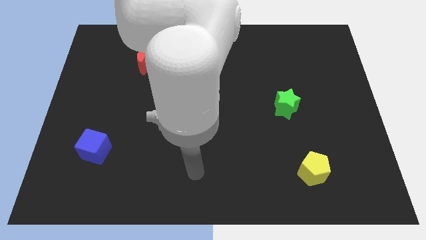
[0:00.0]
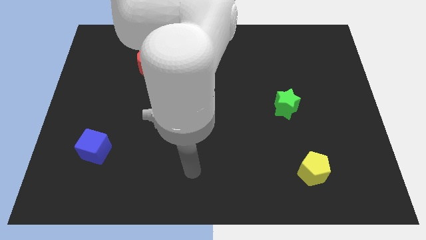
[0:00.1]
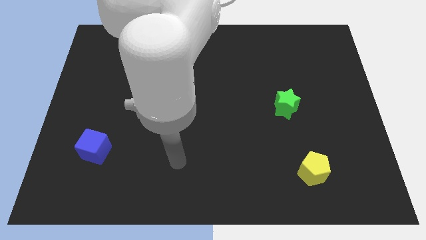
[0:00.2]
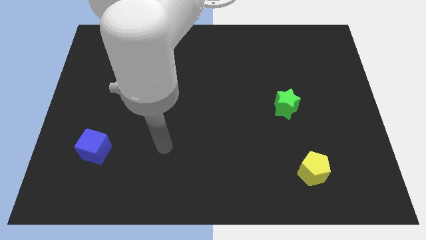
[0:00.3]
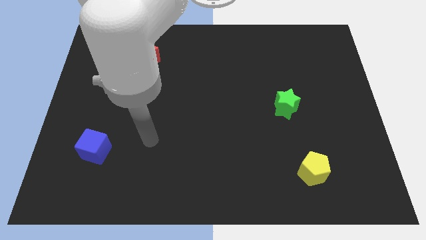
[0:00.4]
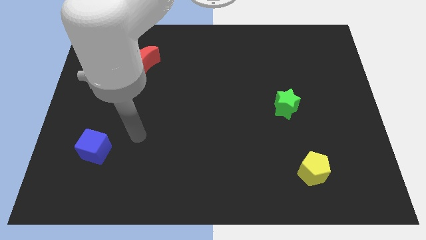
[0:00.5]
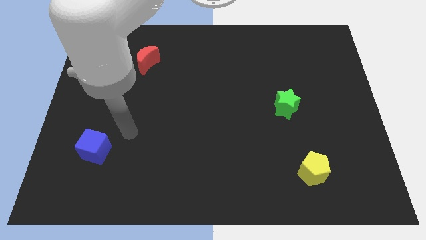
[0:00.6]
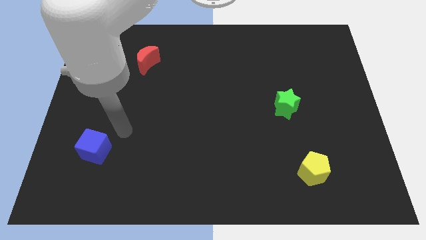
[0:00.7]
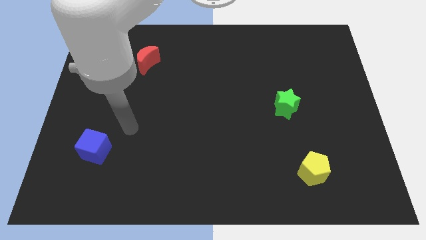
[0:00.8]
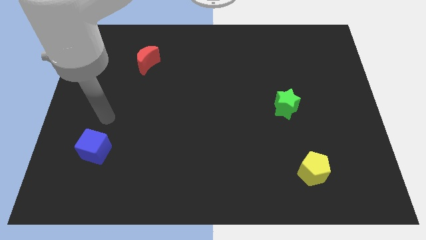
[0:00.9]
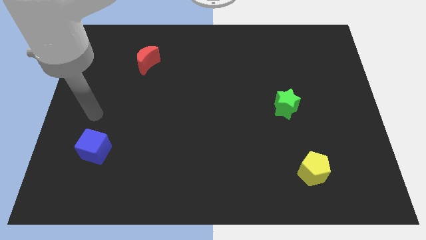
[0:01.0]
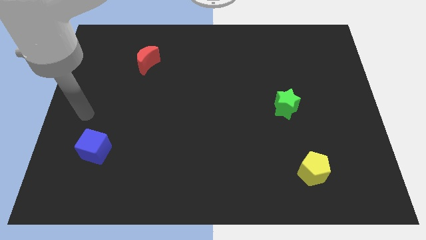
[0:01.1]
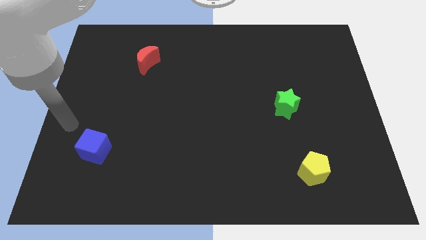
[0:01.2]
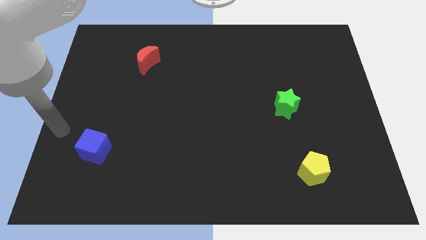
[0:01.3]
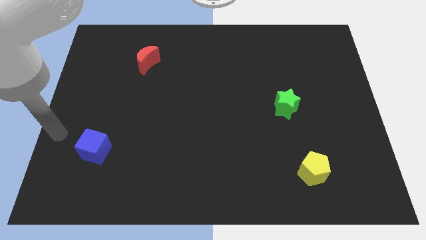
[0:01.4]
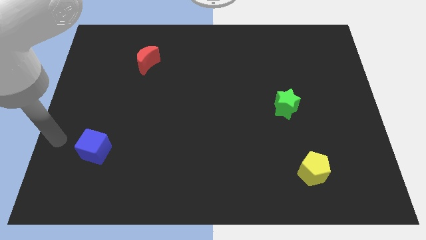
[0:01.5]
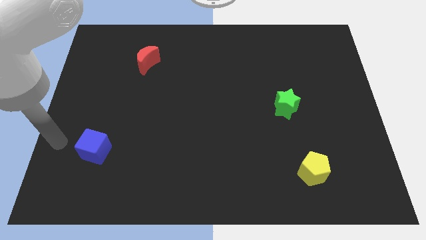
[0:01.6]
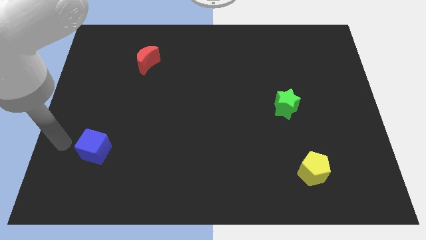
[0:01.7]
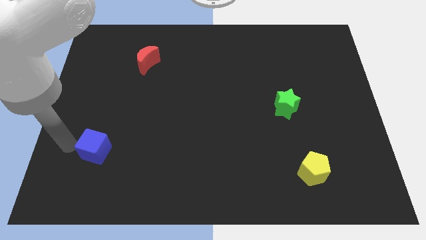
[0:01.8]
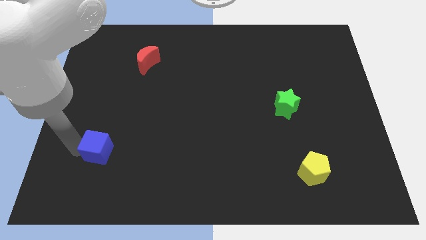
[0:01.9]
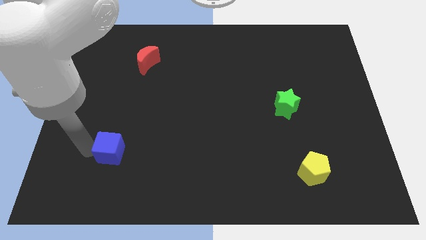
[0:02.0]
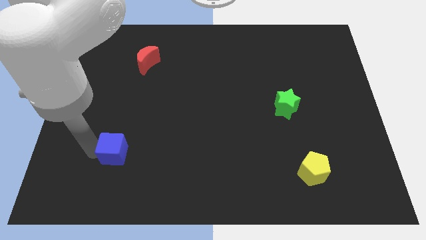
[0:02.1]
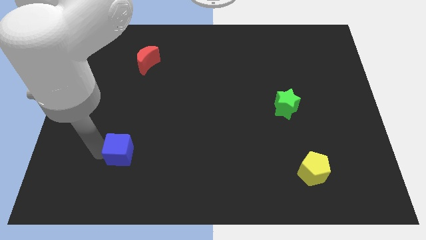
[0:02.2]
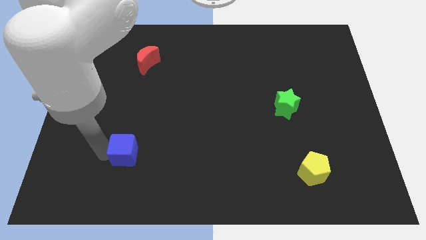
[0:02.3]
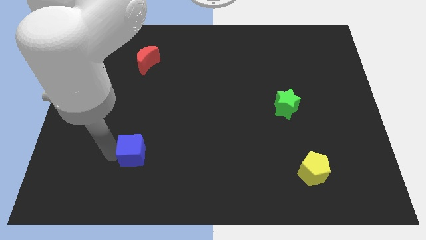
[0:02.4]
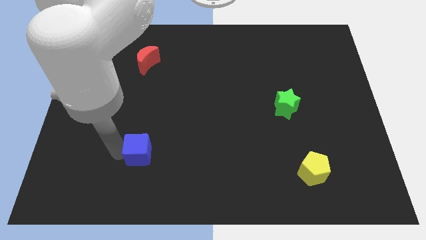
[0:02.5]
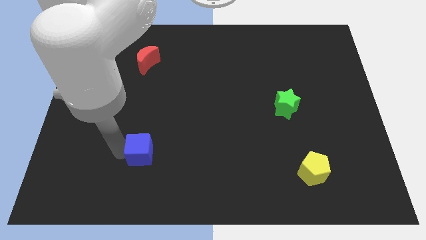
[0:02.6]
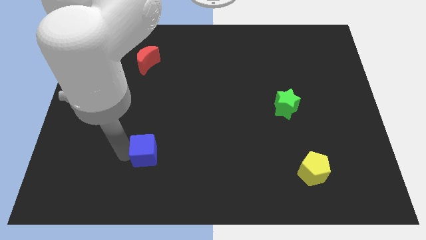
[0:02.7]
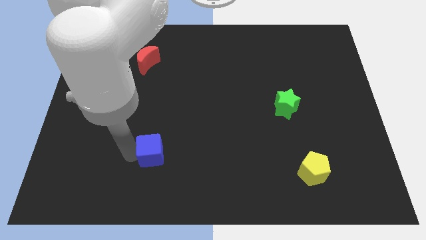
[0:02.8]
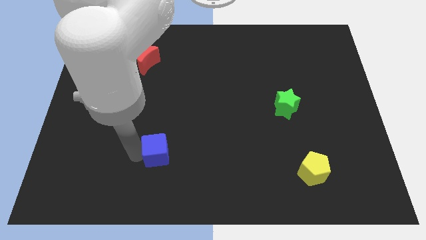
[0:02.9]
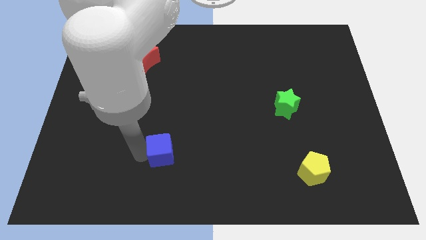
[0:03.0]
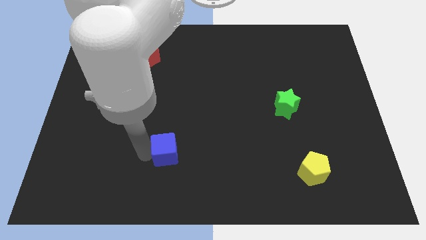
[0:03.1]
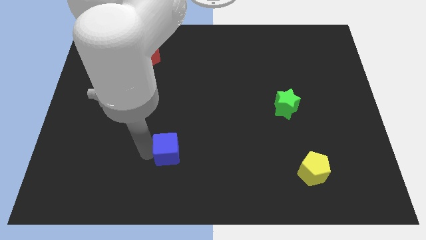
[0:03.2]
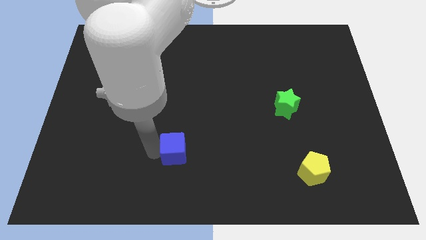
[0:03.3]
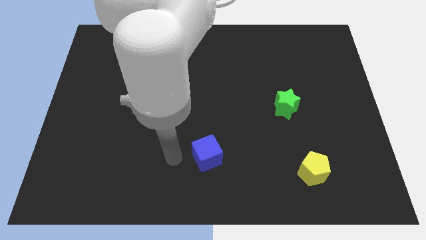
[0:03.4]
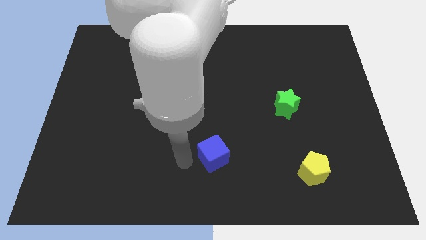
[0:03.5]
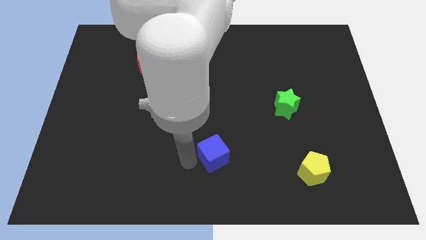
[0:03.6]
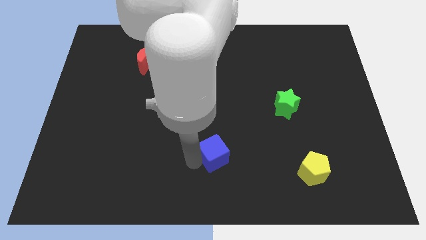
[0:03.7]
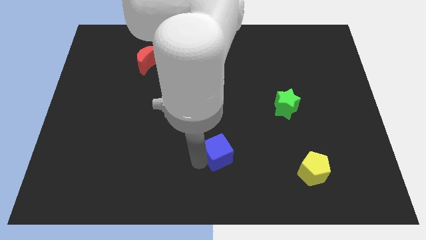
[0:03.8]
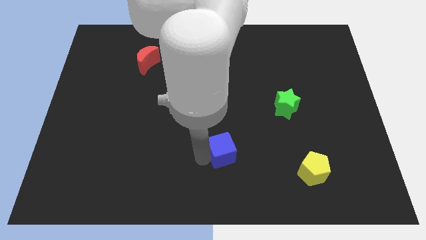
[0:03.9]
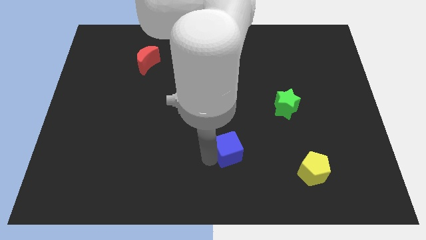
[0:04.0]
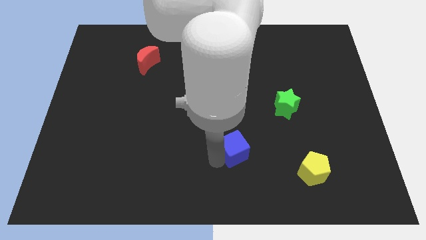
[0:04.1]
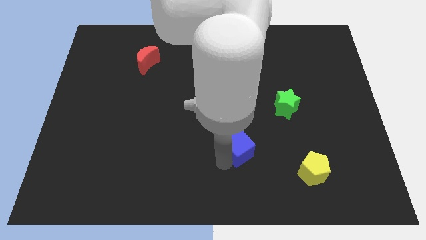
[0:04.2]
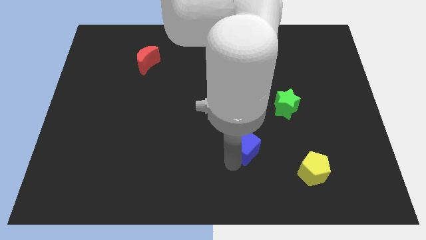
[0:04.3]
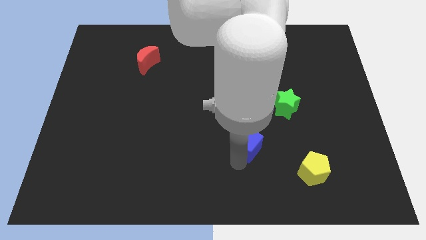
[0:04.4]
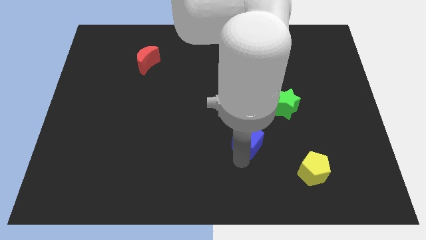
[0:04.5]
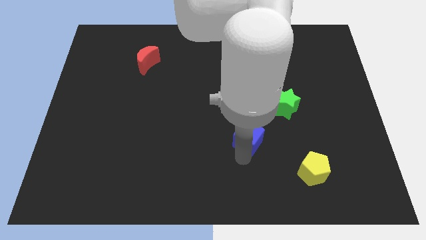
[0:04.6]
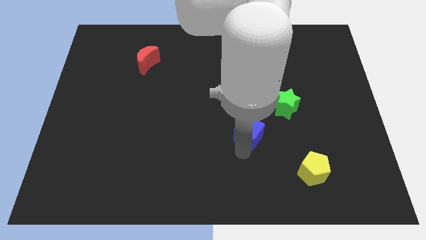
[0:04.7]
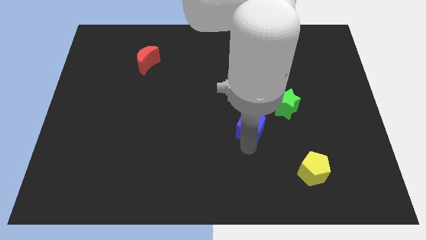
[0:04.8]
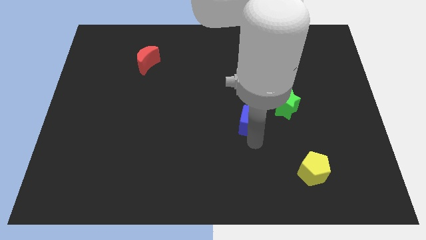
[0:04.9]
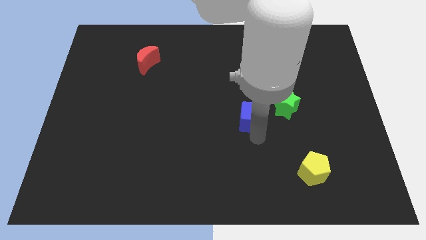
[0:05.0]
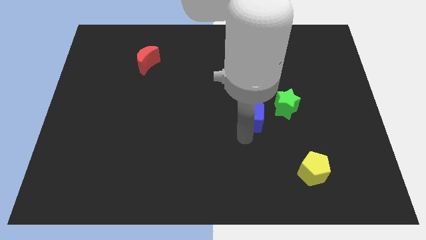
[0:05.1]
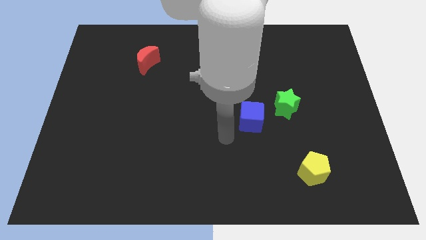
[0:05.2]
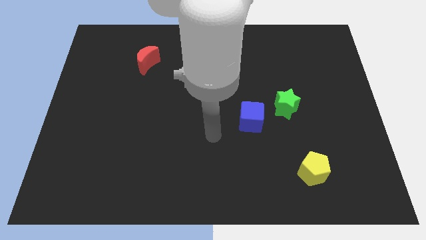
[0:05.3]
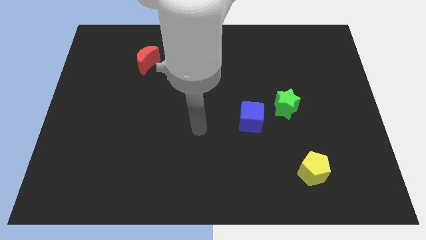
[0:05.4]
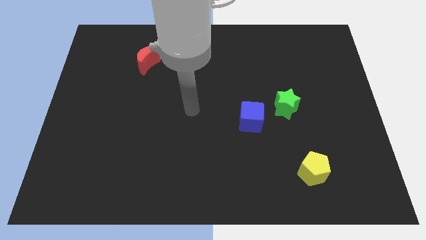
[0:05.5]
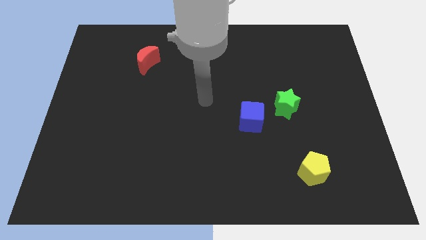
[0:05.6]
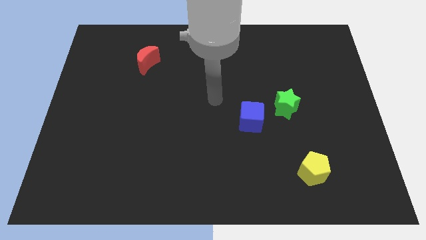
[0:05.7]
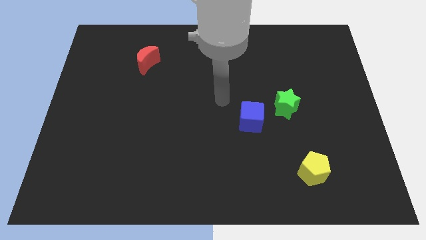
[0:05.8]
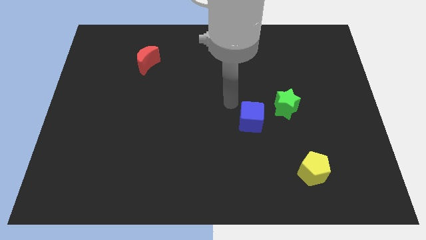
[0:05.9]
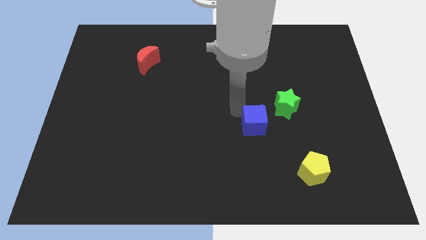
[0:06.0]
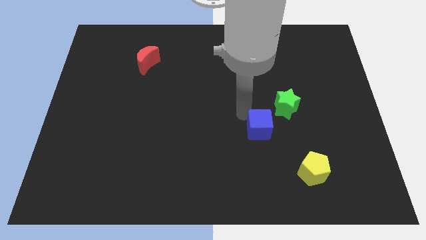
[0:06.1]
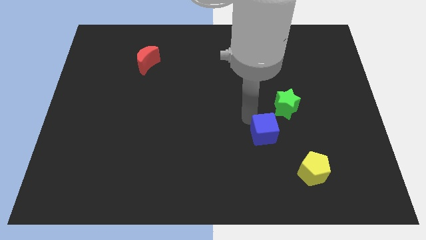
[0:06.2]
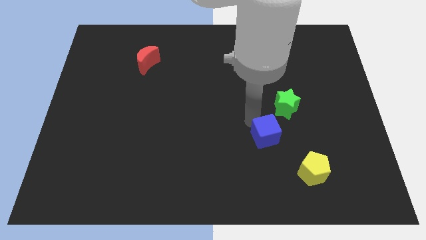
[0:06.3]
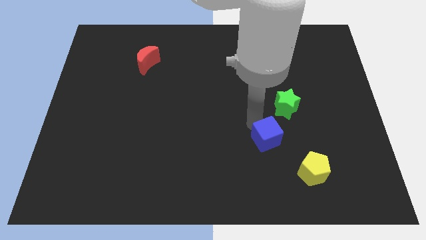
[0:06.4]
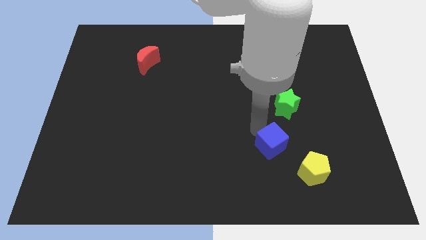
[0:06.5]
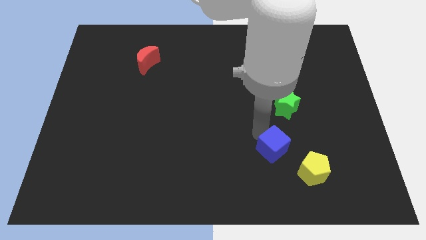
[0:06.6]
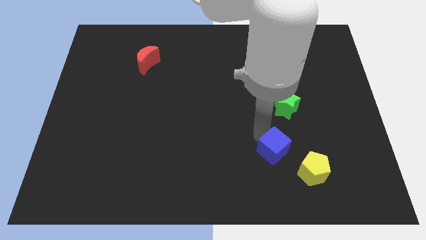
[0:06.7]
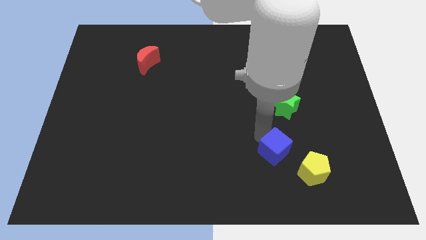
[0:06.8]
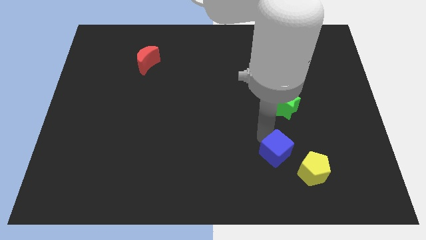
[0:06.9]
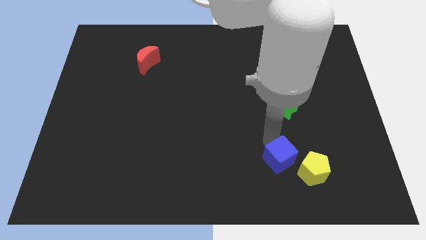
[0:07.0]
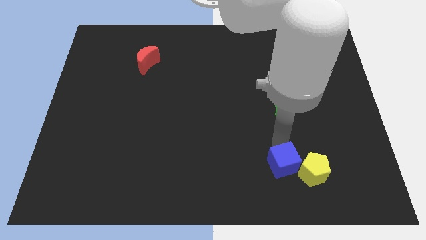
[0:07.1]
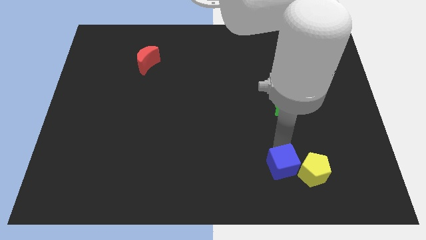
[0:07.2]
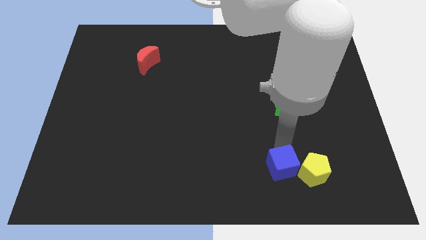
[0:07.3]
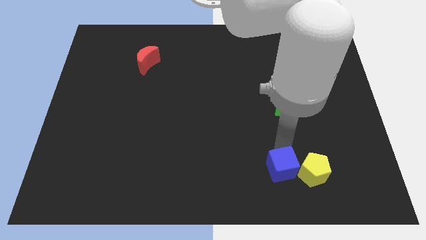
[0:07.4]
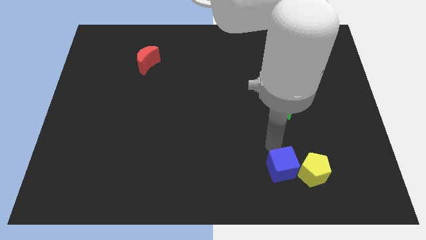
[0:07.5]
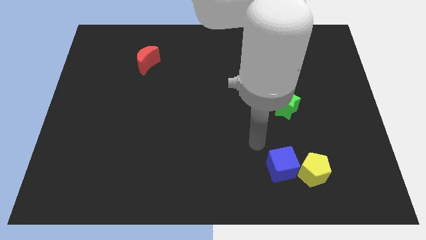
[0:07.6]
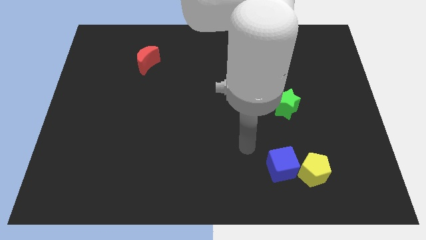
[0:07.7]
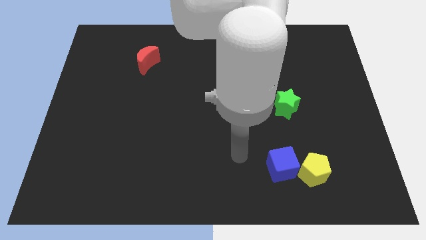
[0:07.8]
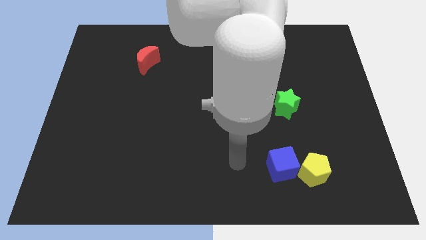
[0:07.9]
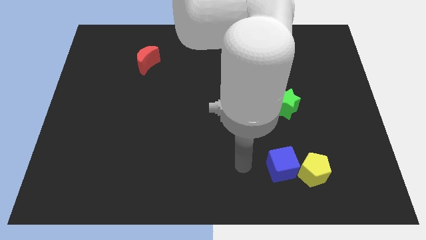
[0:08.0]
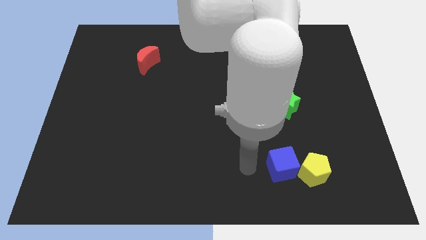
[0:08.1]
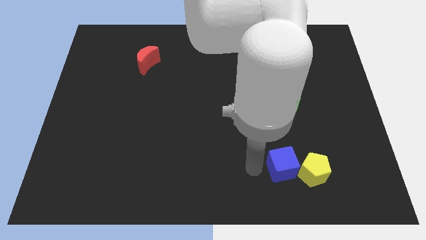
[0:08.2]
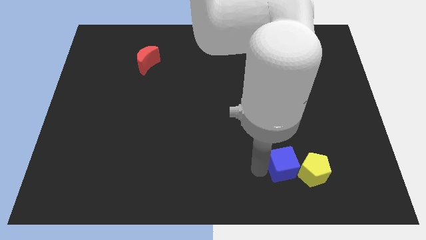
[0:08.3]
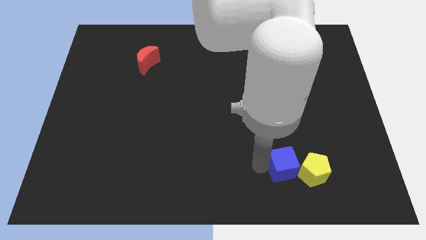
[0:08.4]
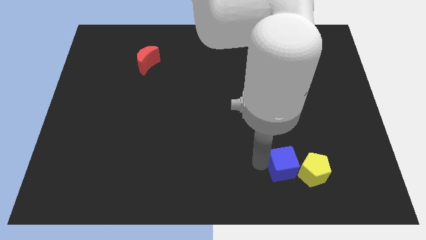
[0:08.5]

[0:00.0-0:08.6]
put the blue cube next to the yellow block
